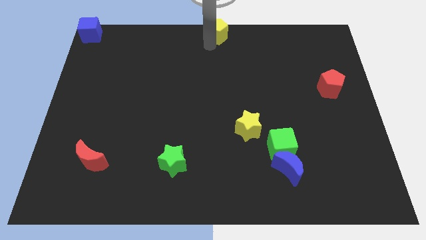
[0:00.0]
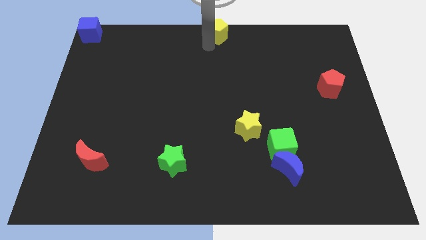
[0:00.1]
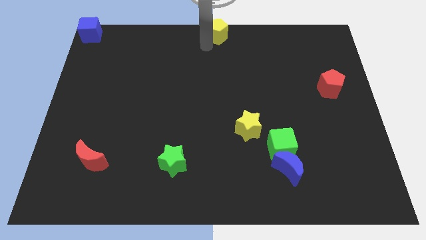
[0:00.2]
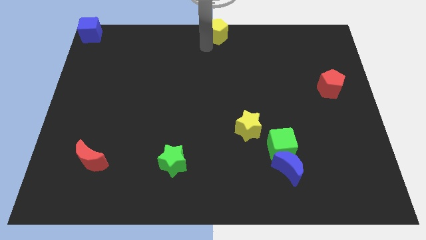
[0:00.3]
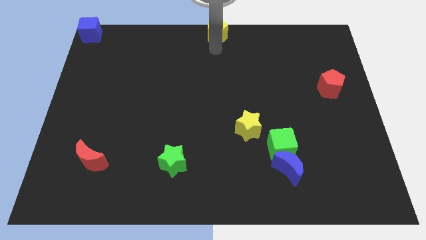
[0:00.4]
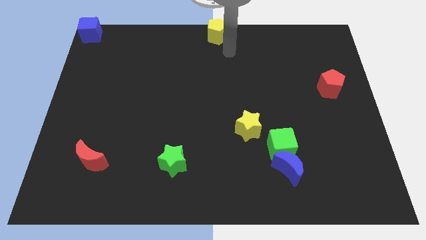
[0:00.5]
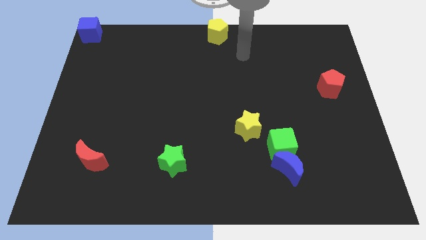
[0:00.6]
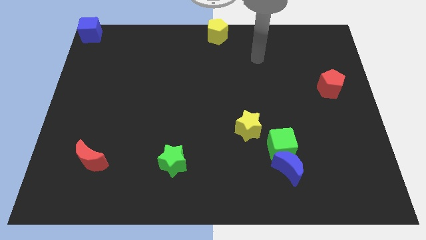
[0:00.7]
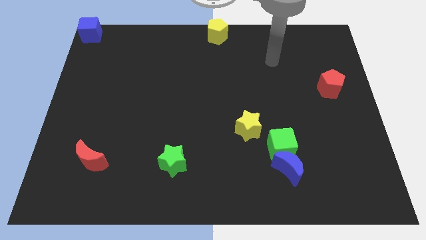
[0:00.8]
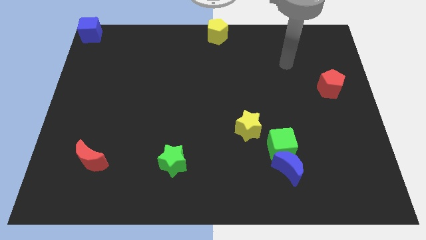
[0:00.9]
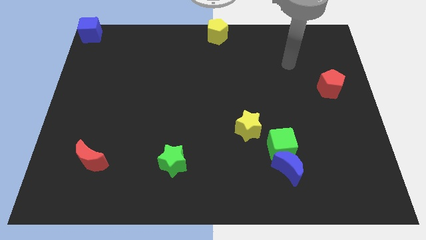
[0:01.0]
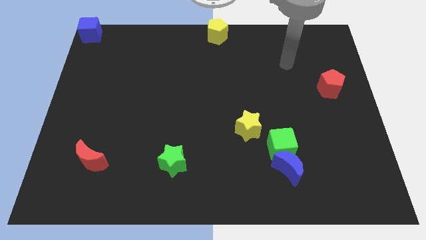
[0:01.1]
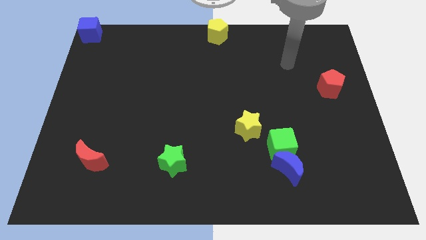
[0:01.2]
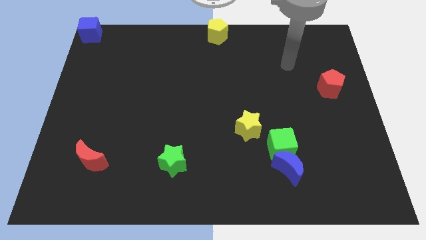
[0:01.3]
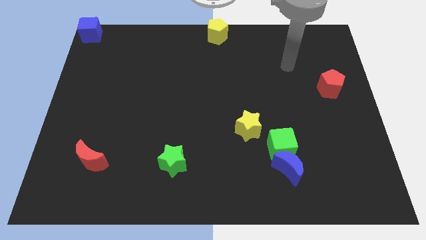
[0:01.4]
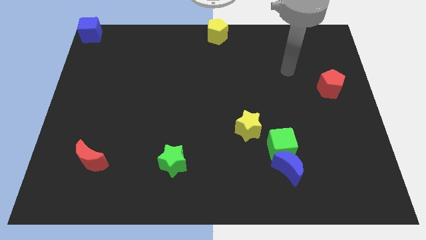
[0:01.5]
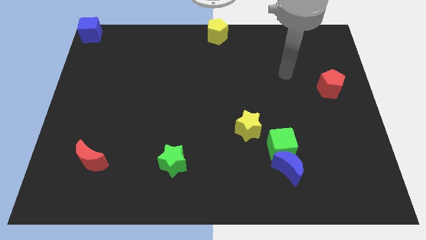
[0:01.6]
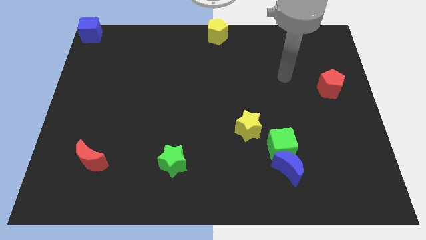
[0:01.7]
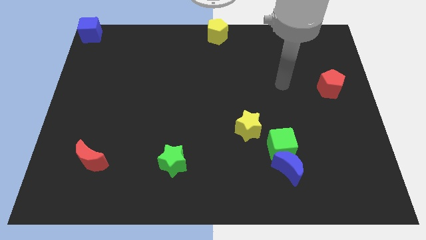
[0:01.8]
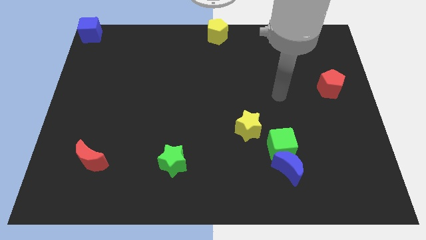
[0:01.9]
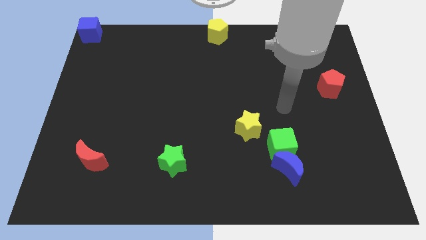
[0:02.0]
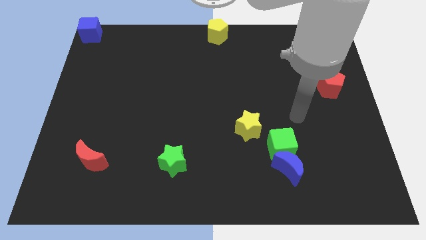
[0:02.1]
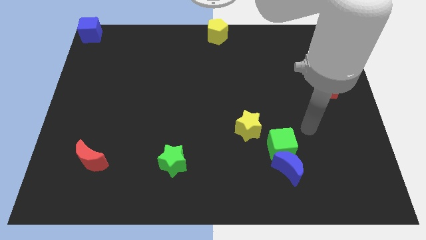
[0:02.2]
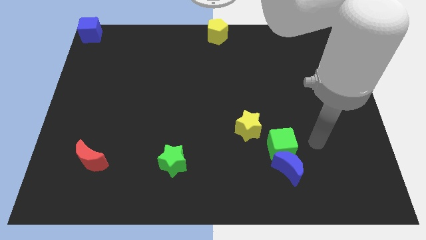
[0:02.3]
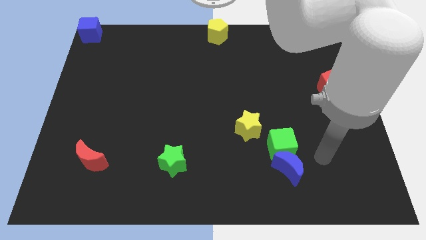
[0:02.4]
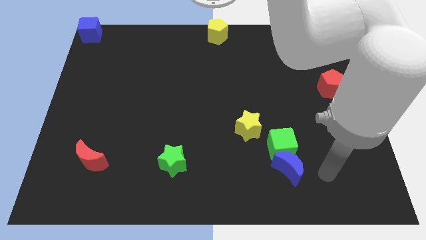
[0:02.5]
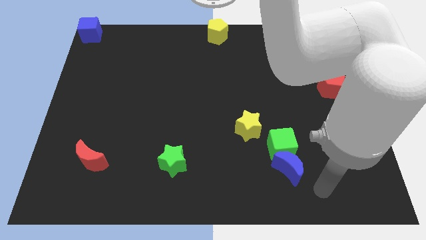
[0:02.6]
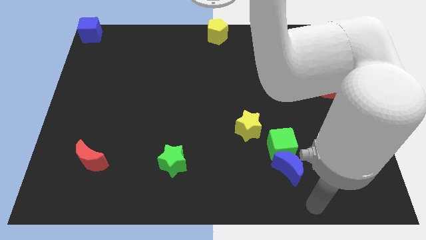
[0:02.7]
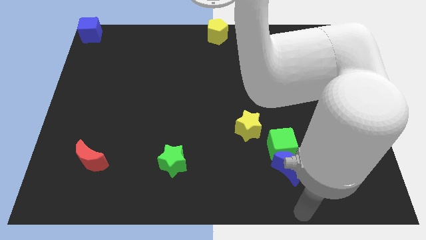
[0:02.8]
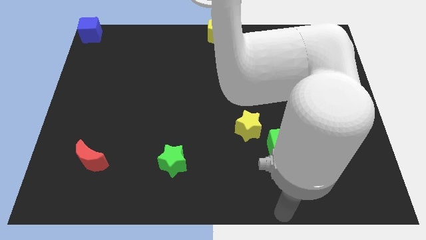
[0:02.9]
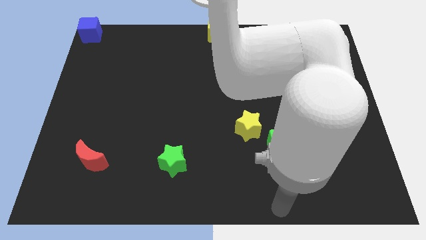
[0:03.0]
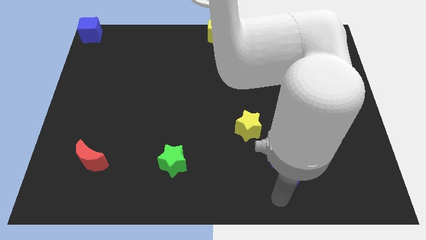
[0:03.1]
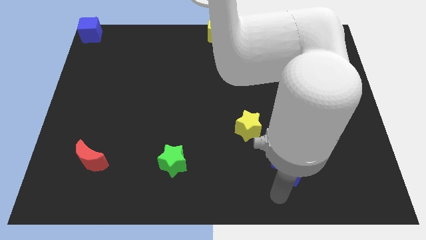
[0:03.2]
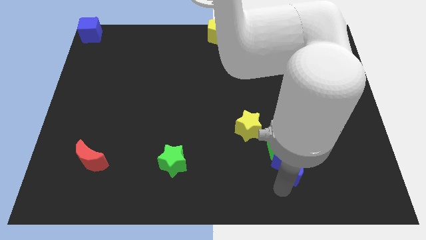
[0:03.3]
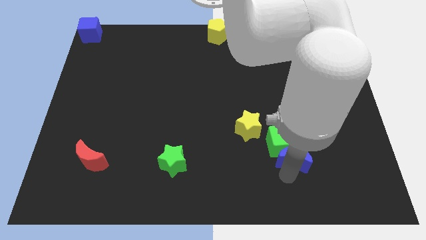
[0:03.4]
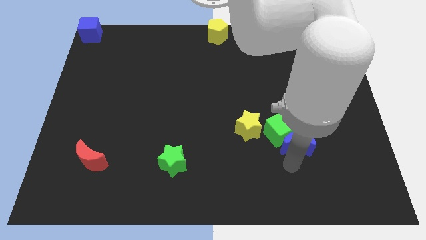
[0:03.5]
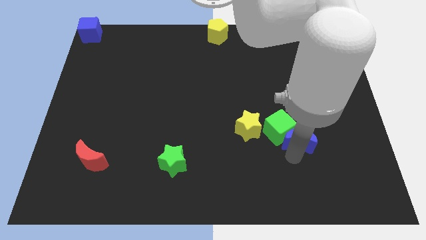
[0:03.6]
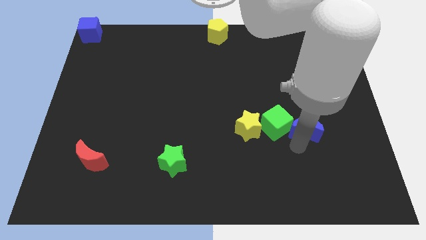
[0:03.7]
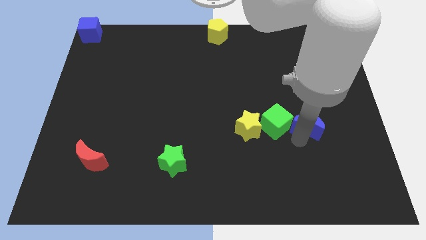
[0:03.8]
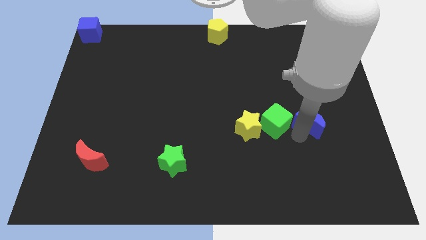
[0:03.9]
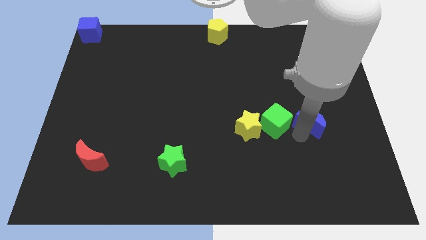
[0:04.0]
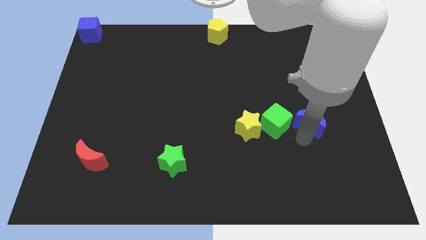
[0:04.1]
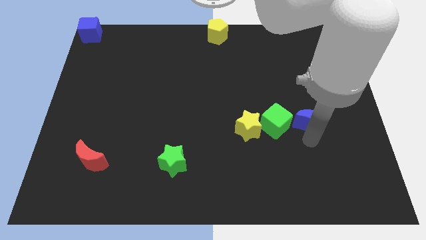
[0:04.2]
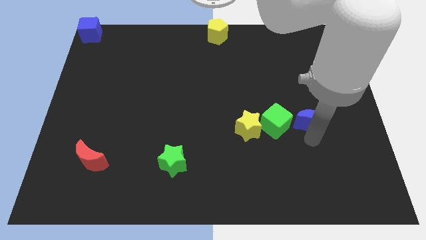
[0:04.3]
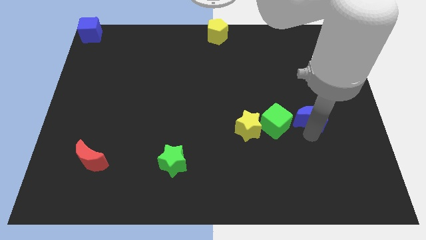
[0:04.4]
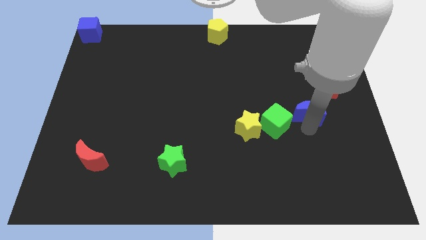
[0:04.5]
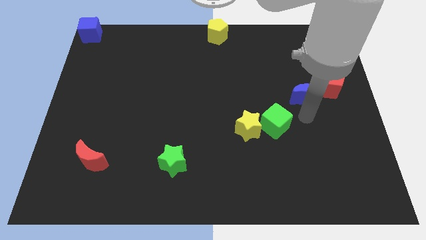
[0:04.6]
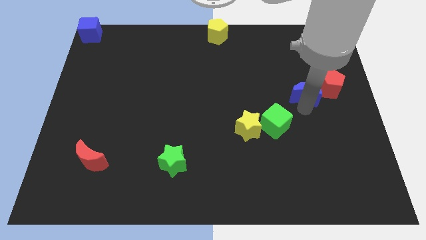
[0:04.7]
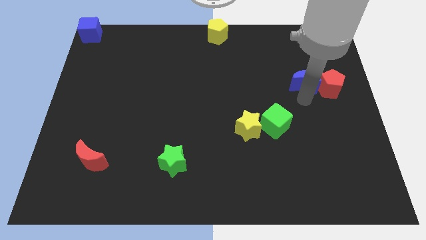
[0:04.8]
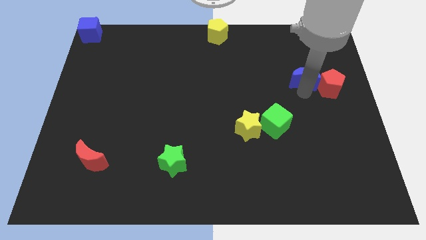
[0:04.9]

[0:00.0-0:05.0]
place the blue crescent left to the red pentagon

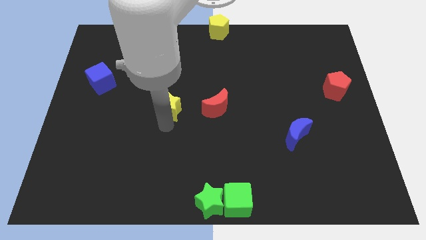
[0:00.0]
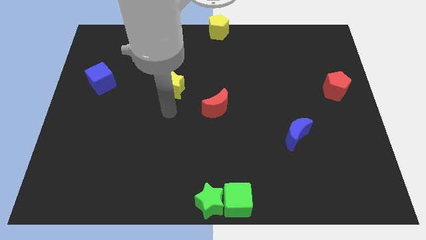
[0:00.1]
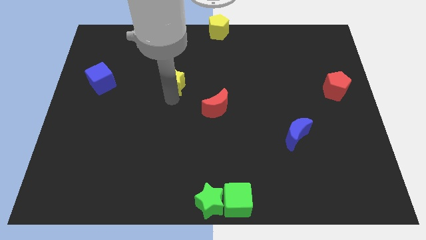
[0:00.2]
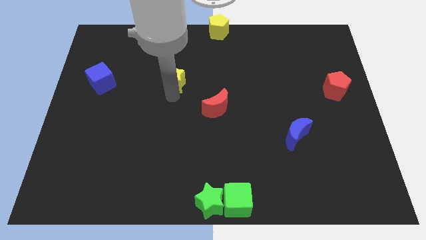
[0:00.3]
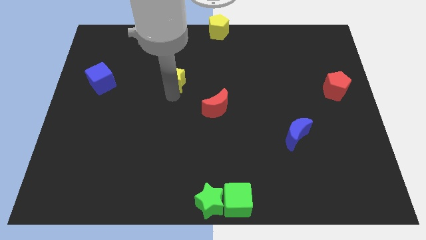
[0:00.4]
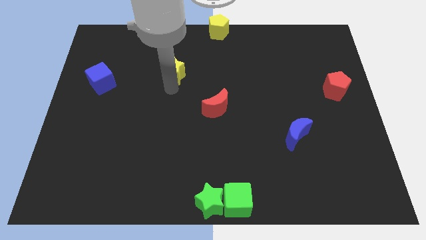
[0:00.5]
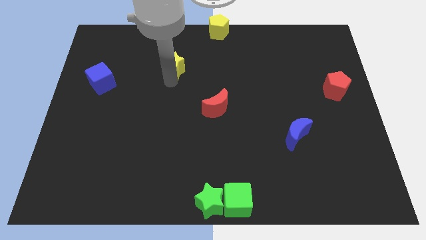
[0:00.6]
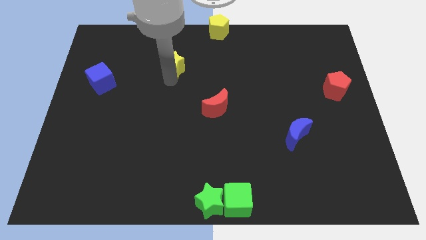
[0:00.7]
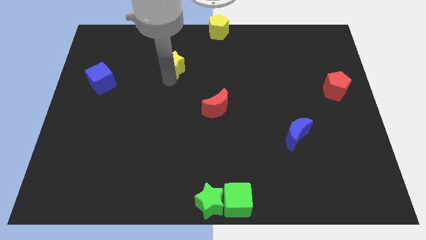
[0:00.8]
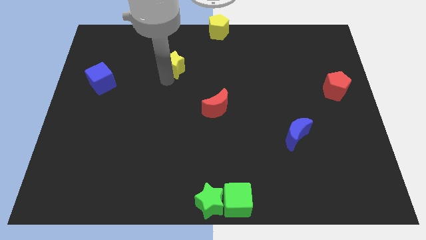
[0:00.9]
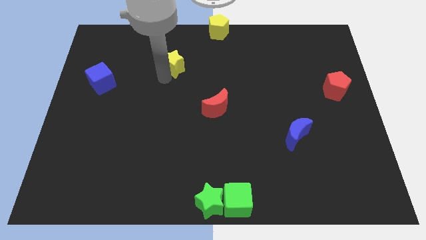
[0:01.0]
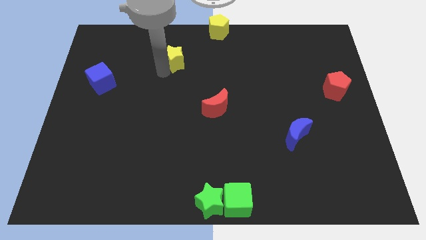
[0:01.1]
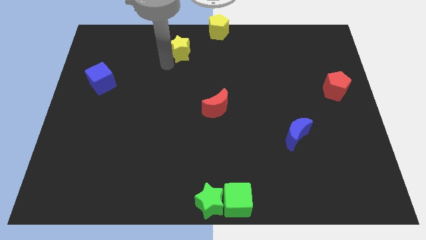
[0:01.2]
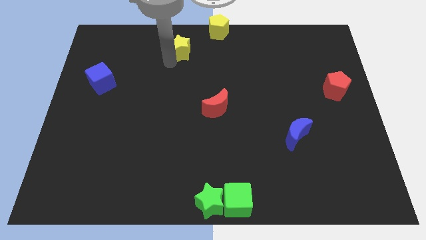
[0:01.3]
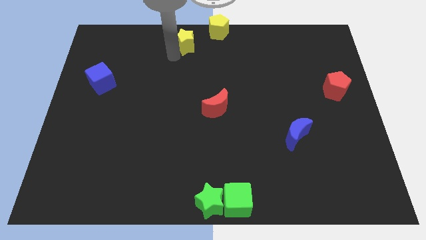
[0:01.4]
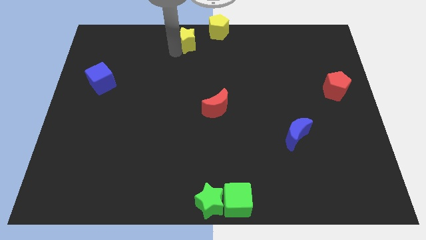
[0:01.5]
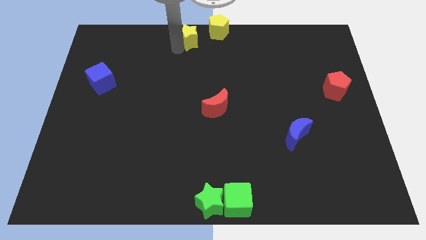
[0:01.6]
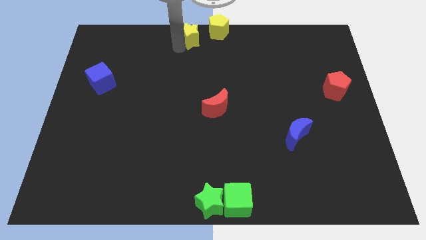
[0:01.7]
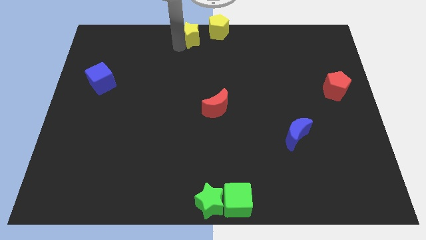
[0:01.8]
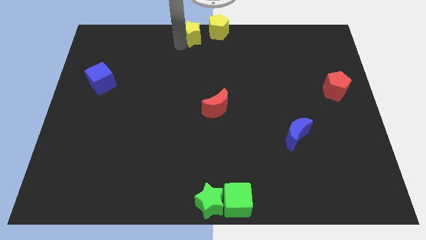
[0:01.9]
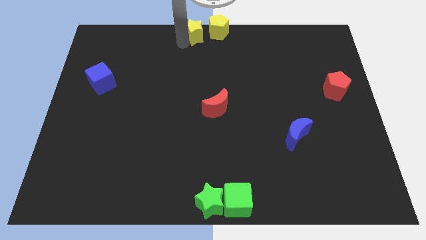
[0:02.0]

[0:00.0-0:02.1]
move the yellow star close to the yellow pentagon

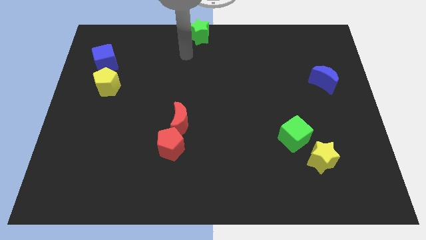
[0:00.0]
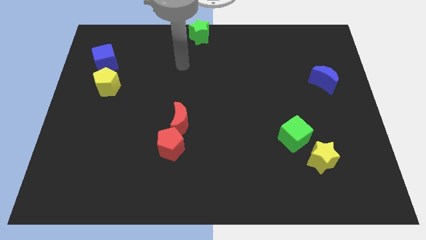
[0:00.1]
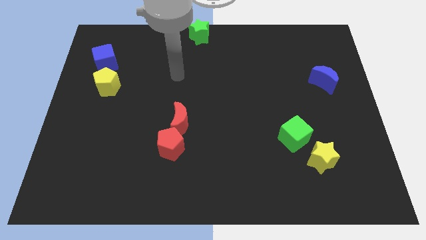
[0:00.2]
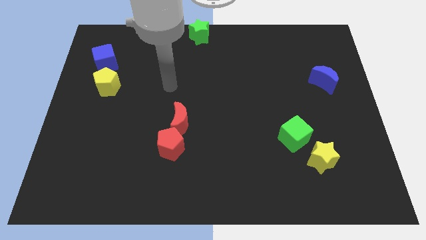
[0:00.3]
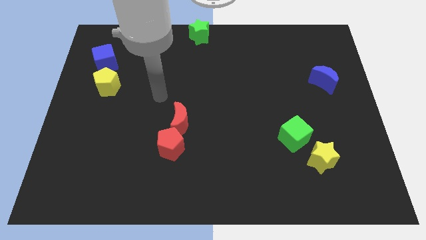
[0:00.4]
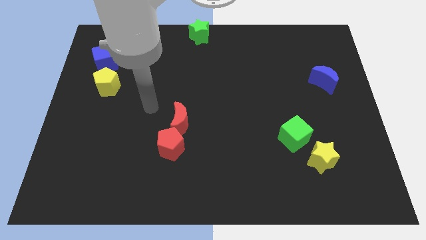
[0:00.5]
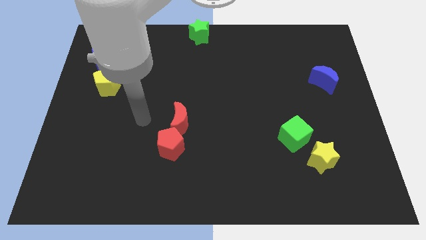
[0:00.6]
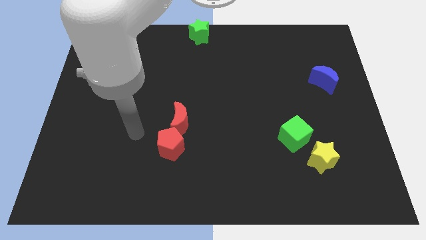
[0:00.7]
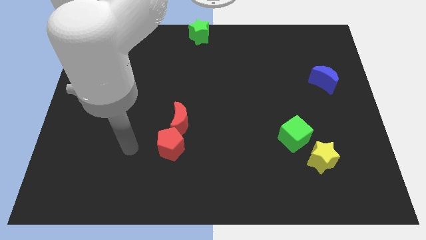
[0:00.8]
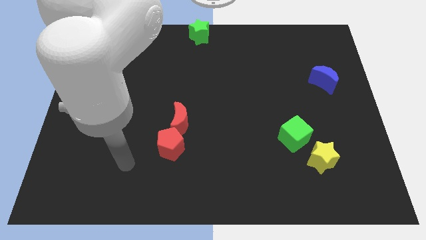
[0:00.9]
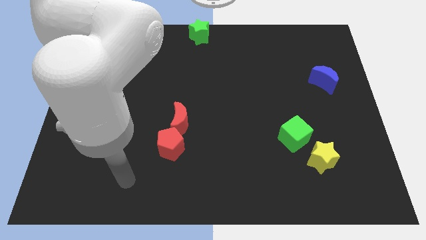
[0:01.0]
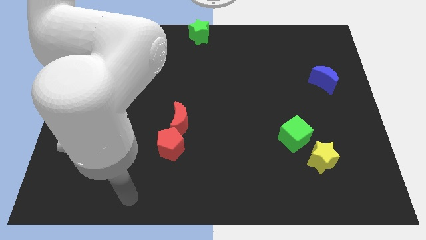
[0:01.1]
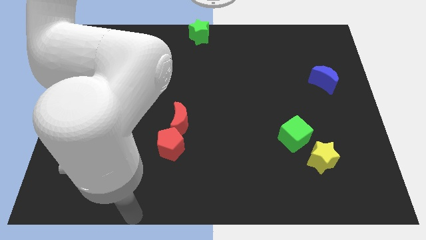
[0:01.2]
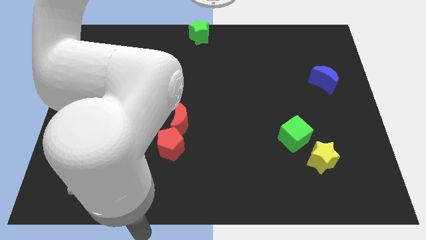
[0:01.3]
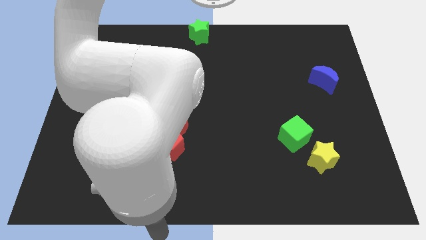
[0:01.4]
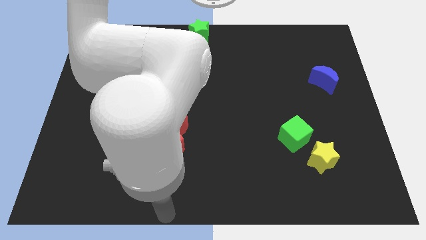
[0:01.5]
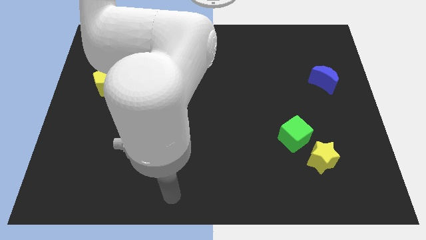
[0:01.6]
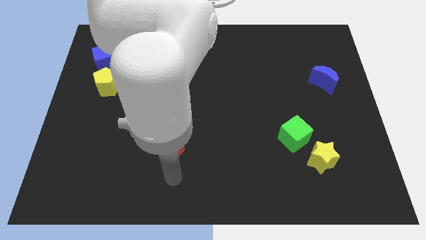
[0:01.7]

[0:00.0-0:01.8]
point your arm at the bottom of the red pentagon
